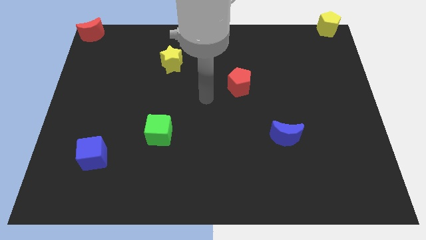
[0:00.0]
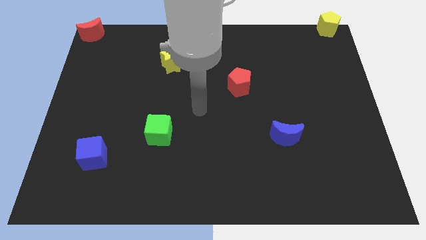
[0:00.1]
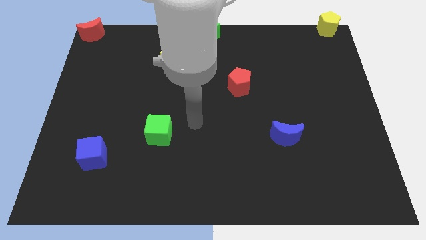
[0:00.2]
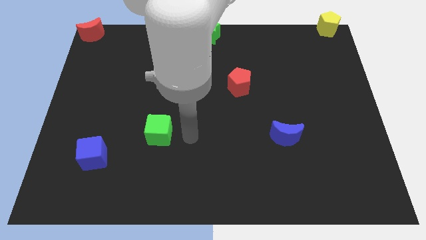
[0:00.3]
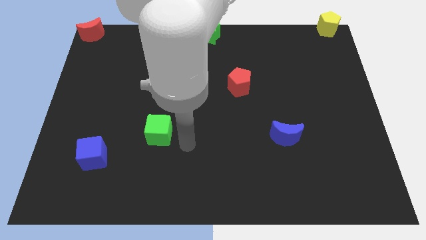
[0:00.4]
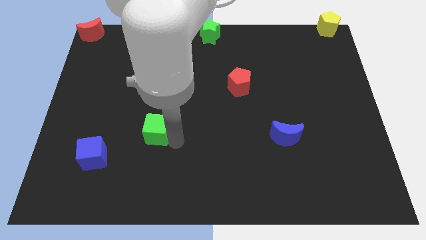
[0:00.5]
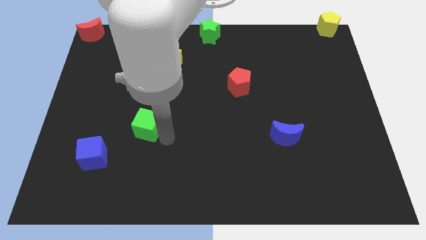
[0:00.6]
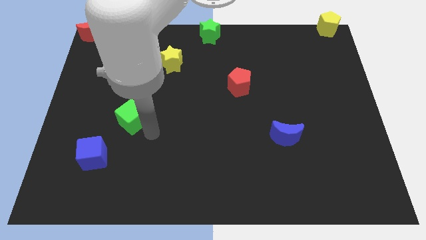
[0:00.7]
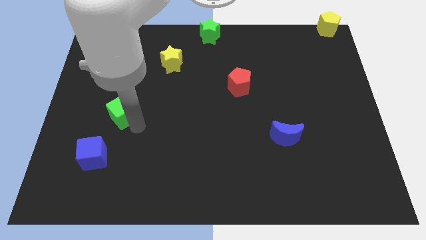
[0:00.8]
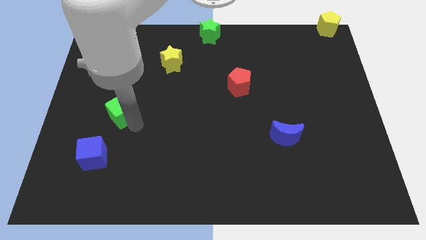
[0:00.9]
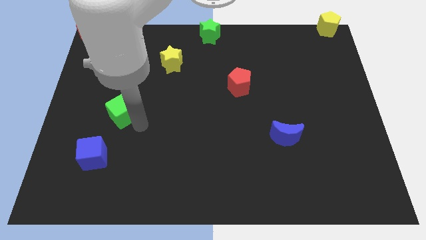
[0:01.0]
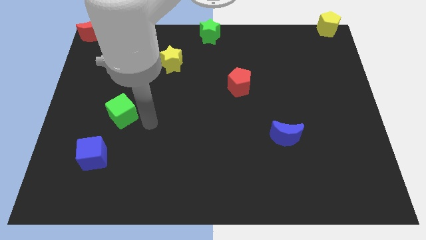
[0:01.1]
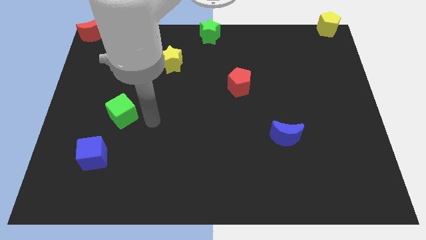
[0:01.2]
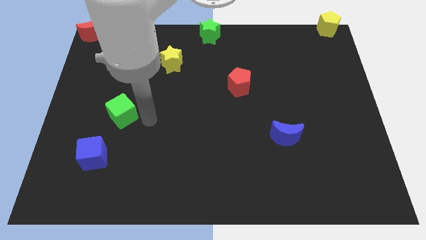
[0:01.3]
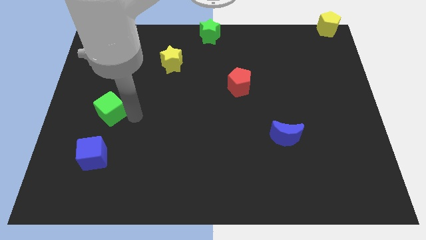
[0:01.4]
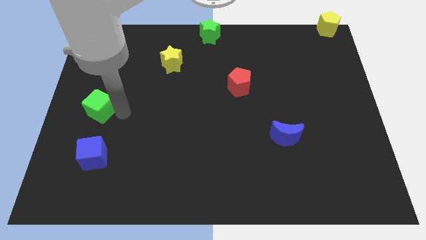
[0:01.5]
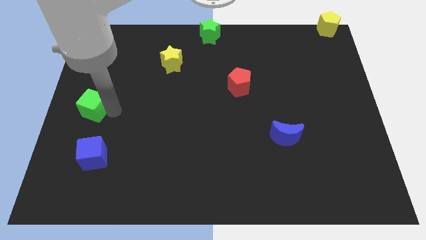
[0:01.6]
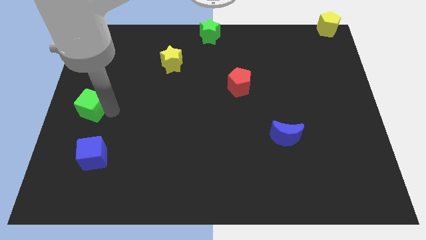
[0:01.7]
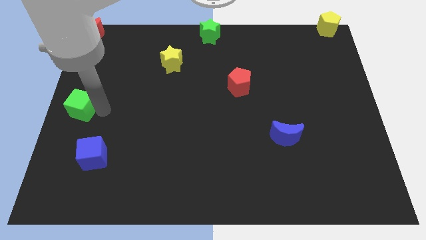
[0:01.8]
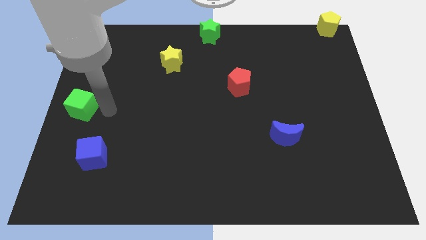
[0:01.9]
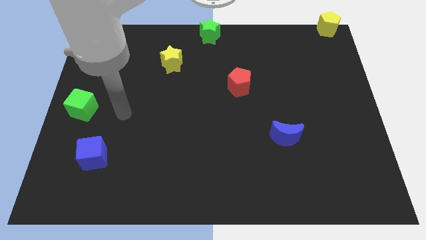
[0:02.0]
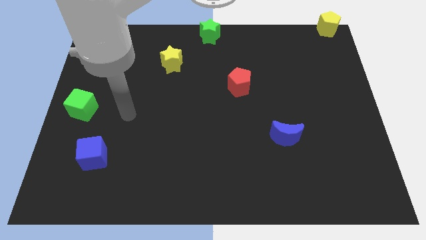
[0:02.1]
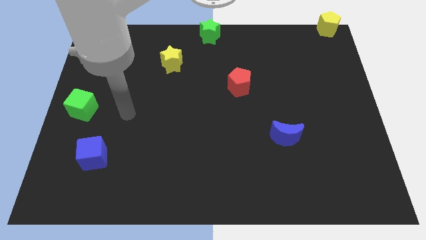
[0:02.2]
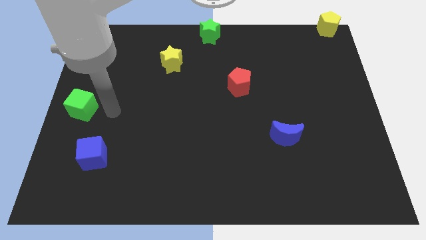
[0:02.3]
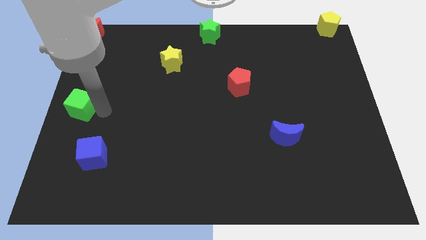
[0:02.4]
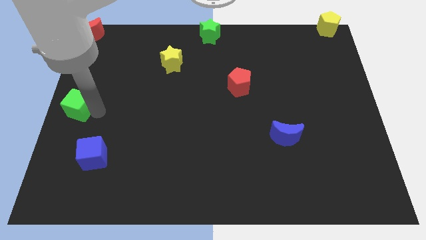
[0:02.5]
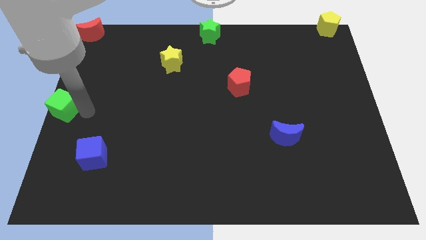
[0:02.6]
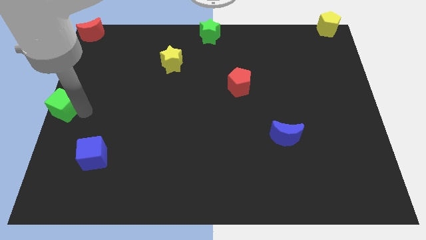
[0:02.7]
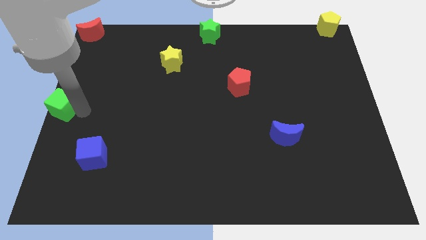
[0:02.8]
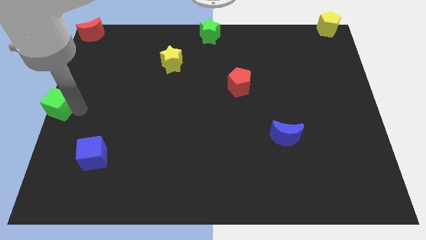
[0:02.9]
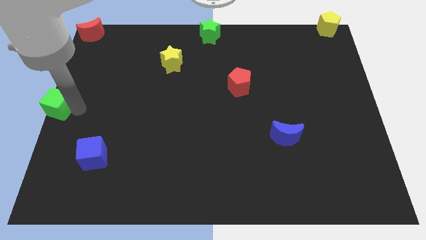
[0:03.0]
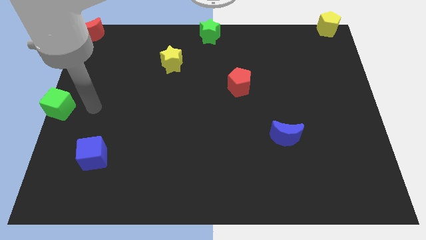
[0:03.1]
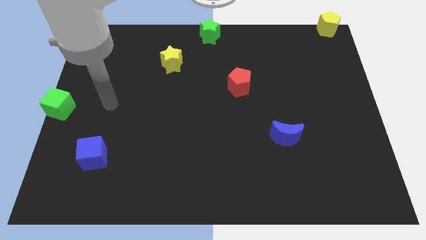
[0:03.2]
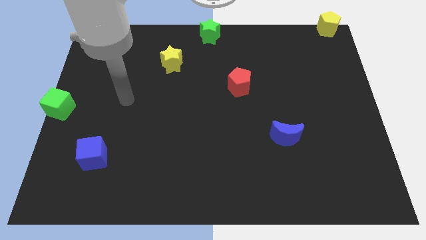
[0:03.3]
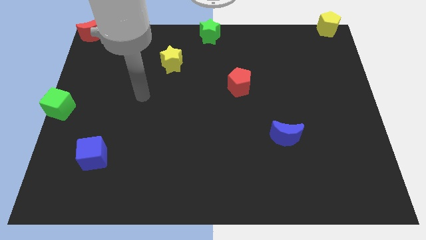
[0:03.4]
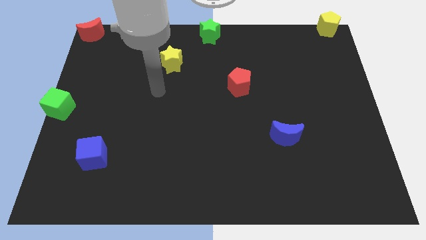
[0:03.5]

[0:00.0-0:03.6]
push the green cube to the center left of the board

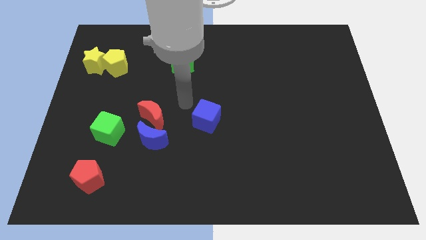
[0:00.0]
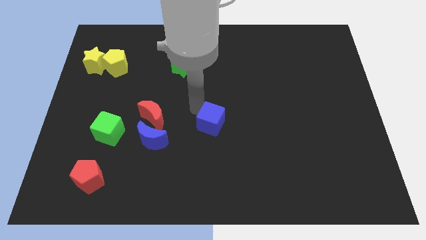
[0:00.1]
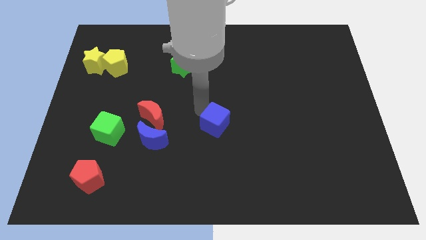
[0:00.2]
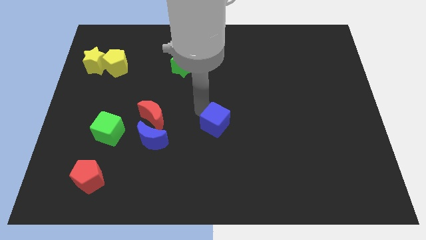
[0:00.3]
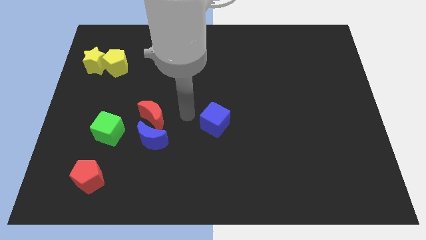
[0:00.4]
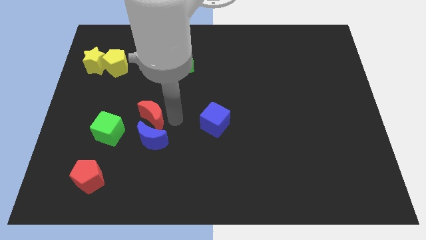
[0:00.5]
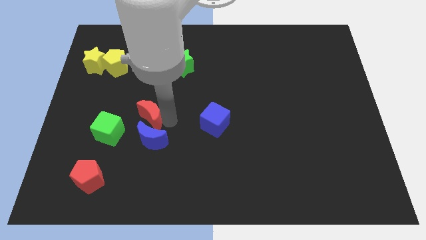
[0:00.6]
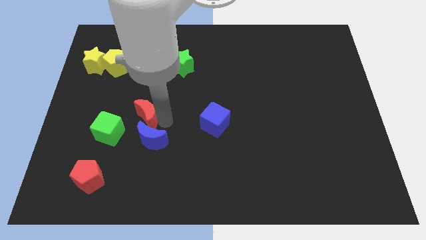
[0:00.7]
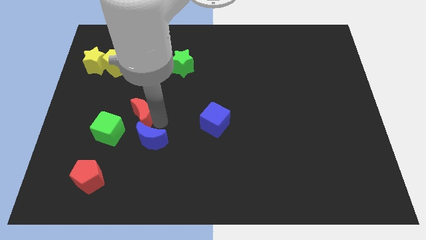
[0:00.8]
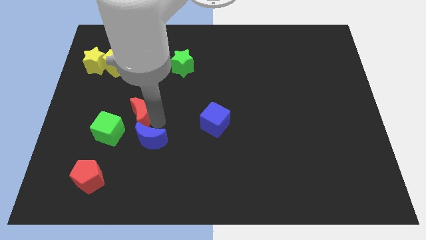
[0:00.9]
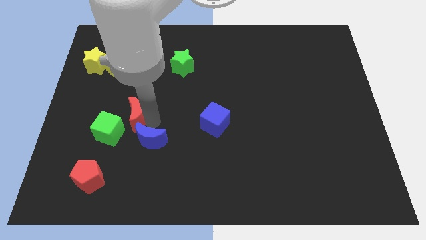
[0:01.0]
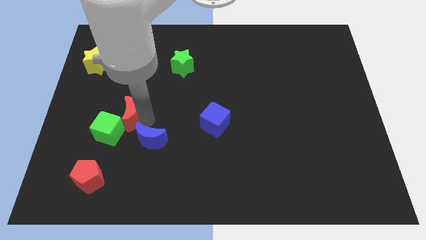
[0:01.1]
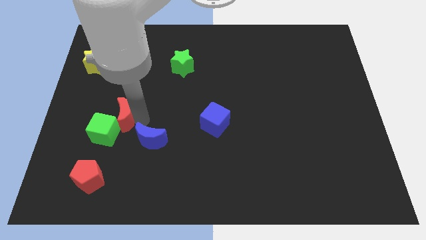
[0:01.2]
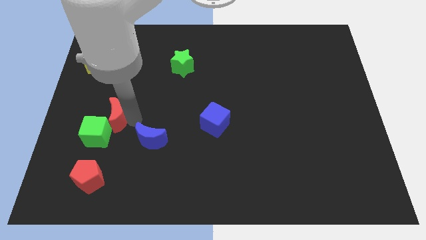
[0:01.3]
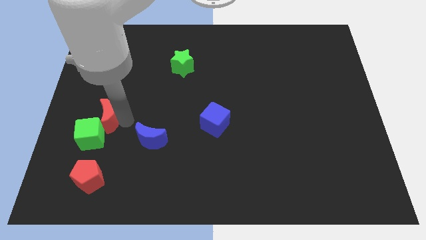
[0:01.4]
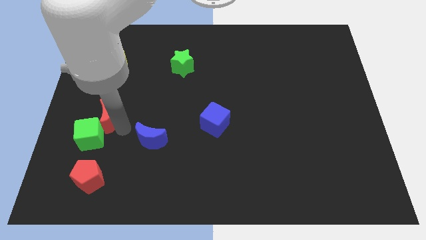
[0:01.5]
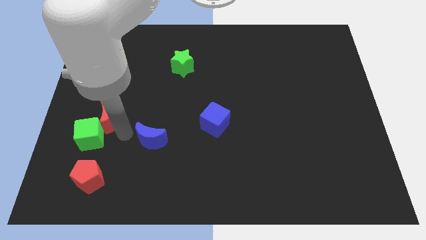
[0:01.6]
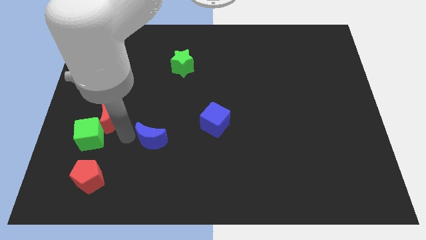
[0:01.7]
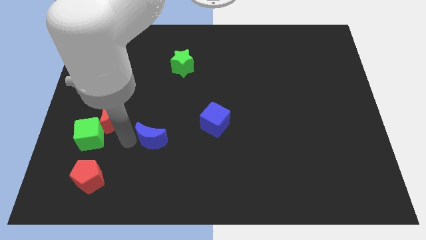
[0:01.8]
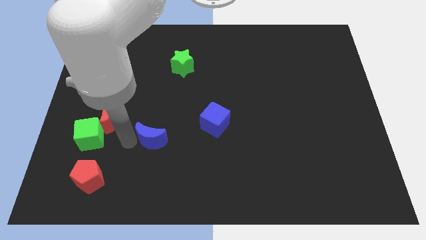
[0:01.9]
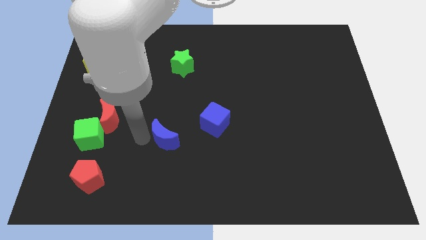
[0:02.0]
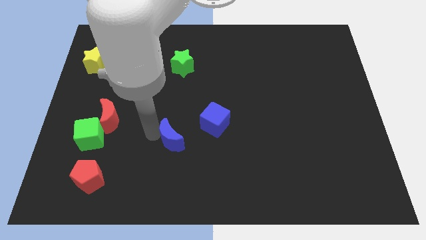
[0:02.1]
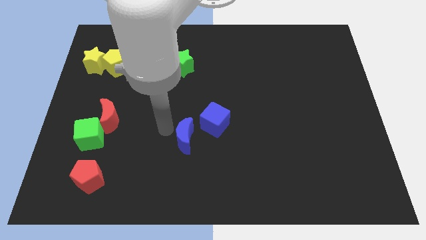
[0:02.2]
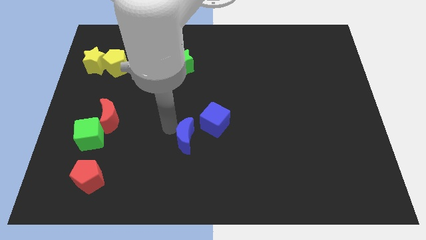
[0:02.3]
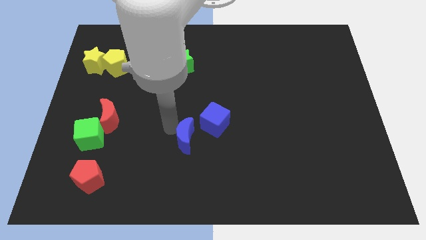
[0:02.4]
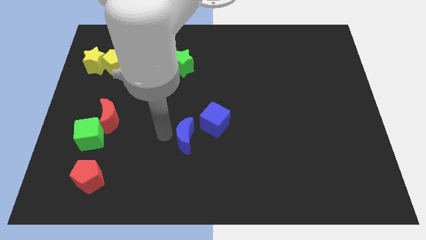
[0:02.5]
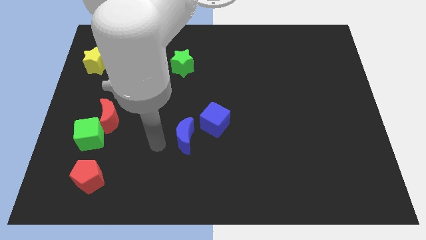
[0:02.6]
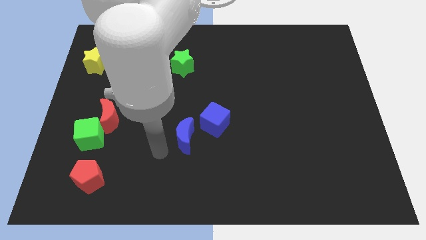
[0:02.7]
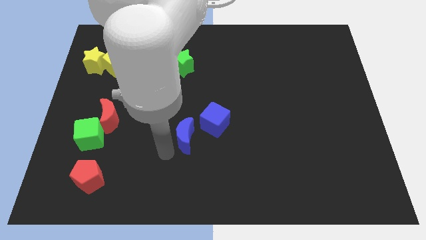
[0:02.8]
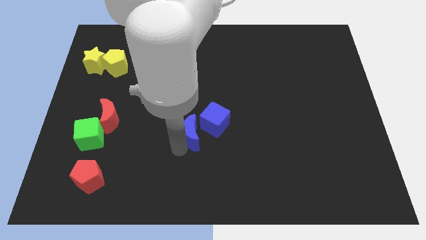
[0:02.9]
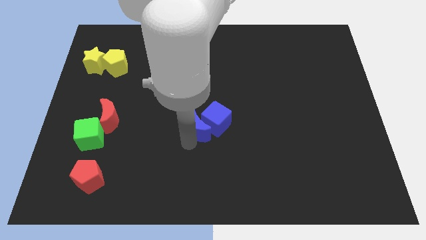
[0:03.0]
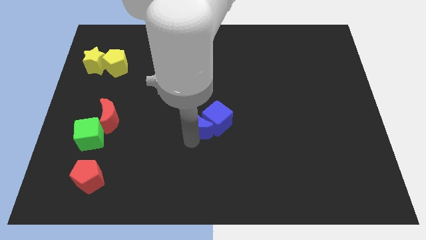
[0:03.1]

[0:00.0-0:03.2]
push blue moon into the blue cube

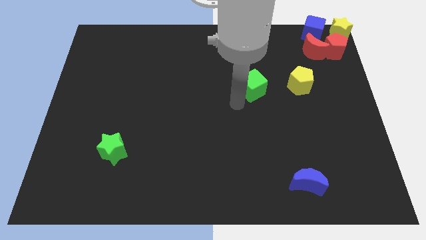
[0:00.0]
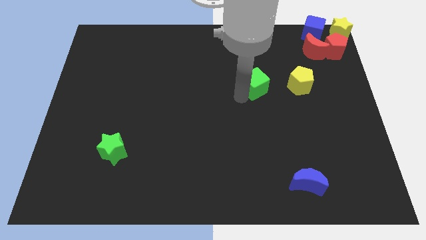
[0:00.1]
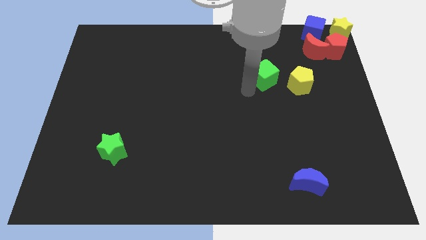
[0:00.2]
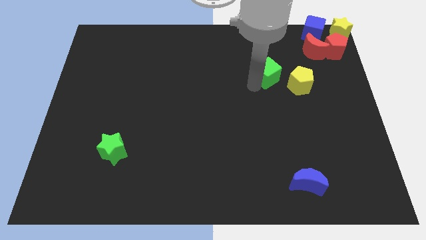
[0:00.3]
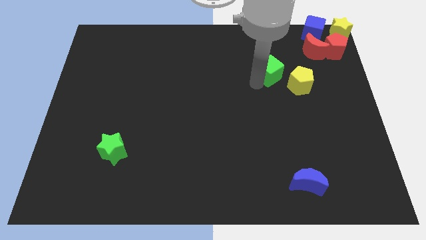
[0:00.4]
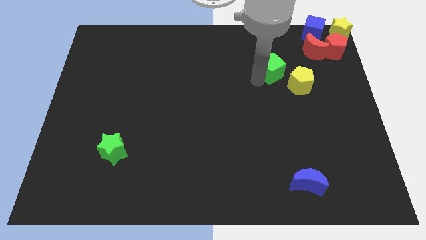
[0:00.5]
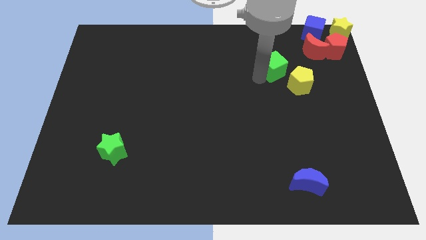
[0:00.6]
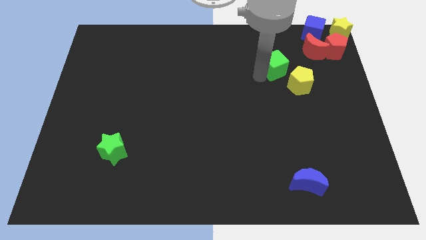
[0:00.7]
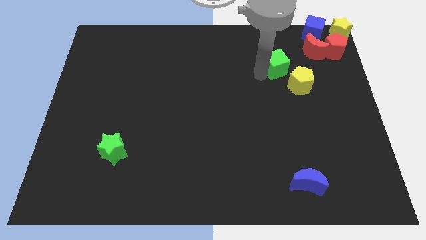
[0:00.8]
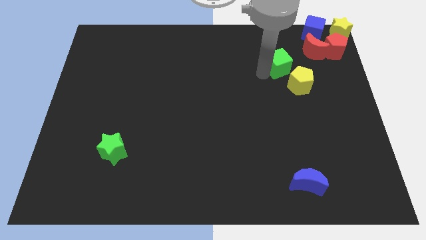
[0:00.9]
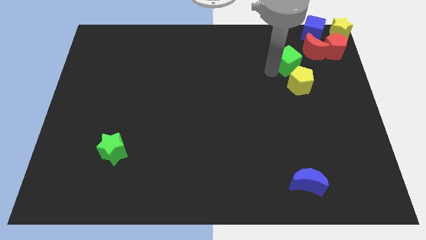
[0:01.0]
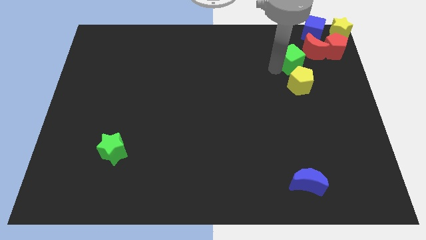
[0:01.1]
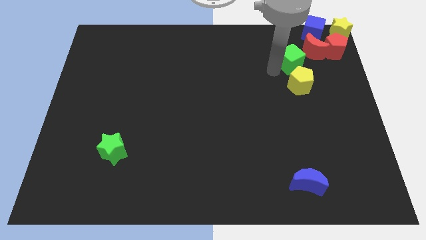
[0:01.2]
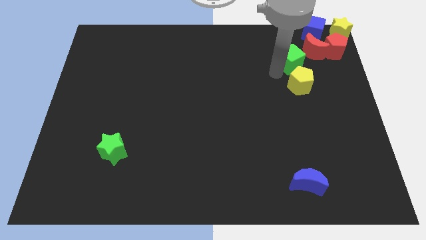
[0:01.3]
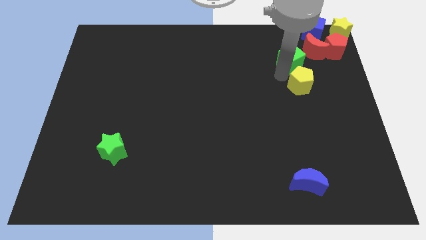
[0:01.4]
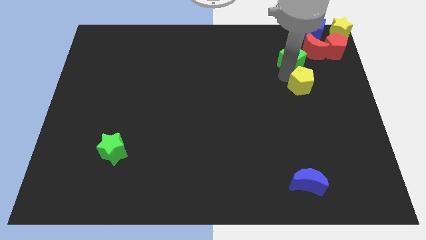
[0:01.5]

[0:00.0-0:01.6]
place green cube close to yellow pentagon

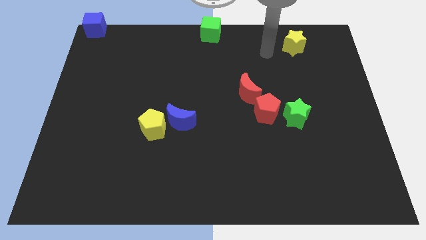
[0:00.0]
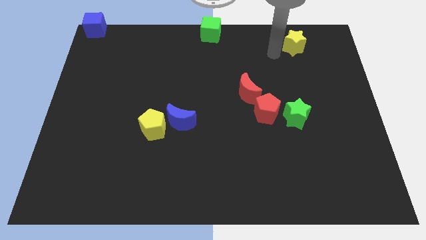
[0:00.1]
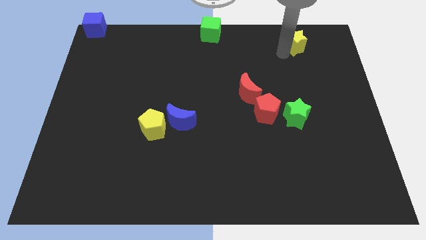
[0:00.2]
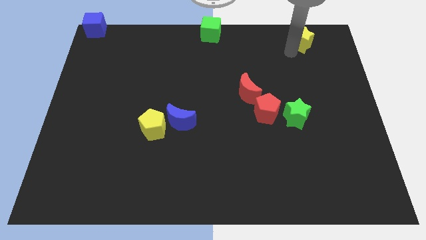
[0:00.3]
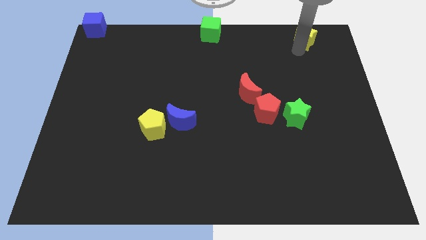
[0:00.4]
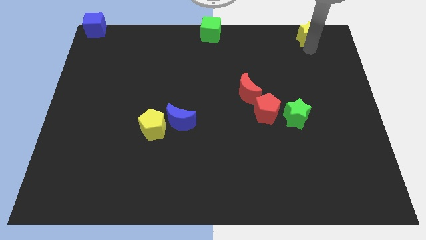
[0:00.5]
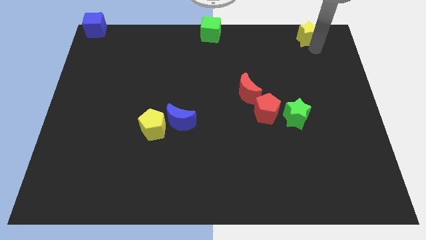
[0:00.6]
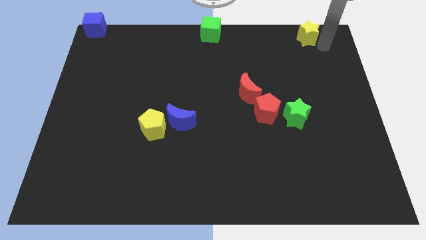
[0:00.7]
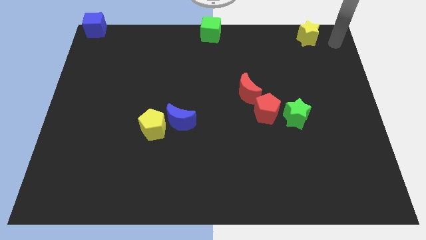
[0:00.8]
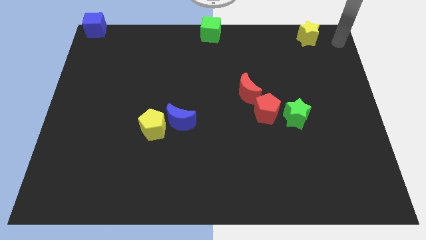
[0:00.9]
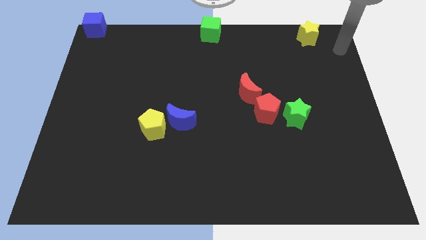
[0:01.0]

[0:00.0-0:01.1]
move yellow star to the top right side of the board
